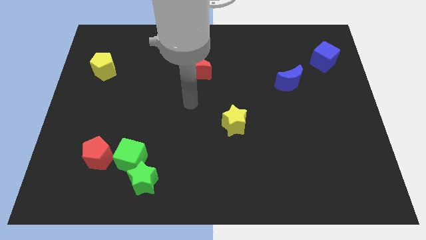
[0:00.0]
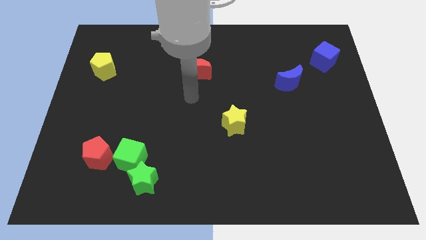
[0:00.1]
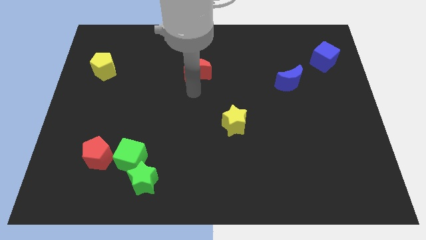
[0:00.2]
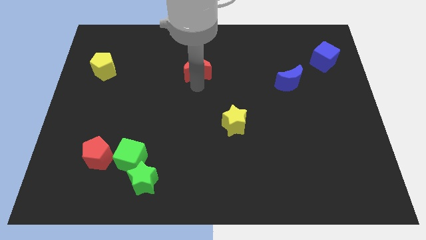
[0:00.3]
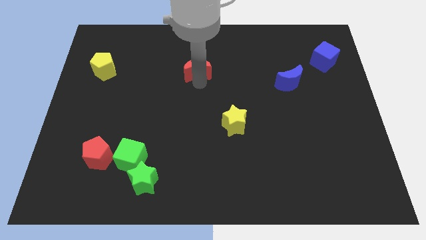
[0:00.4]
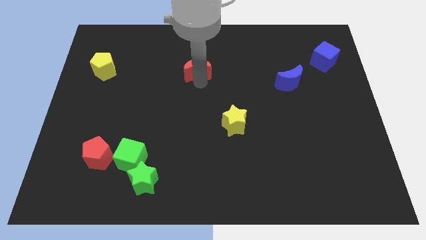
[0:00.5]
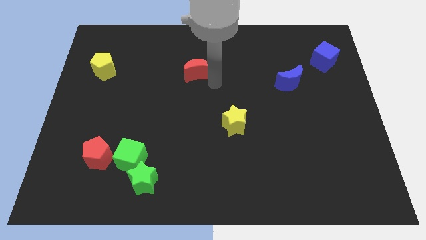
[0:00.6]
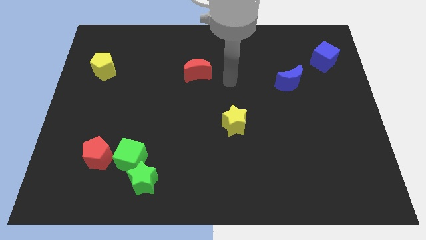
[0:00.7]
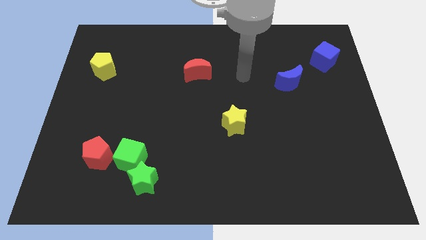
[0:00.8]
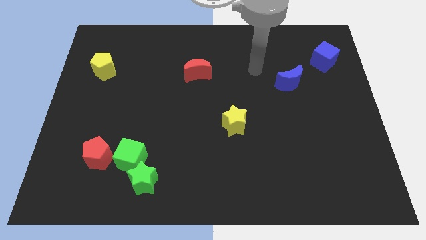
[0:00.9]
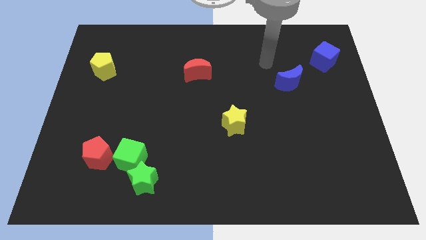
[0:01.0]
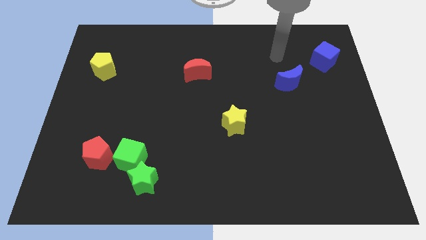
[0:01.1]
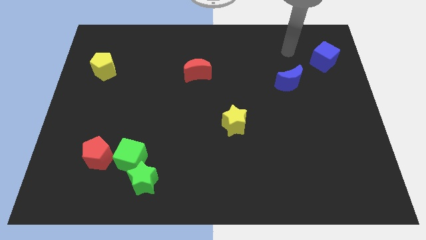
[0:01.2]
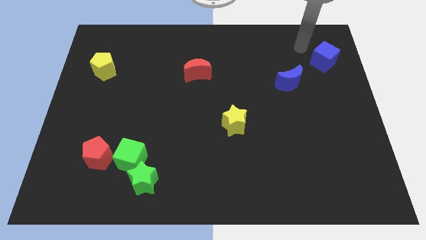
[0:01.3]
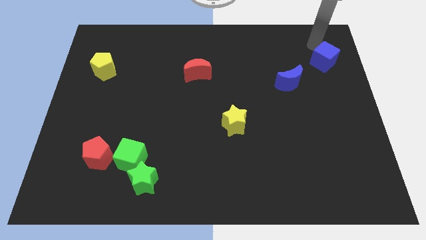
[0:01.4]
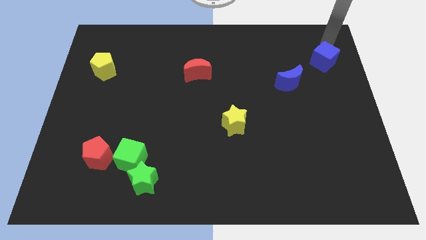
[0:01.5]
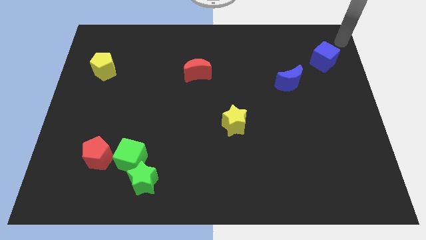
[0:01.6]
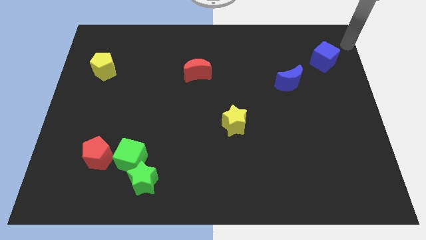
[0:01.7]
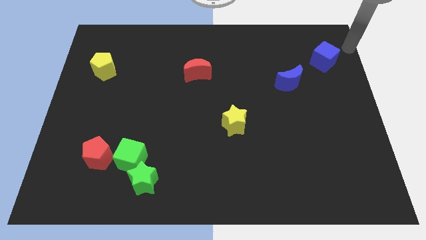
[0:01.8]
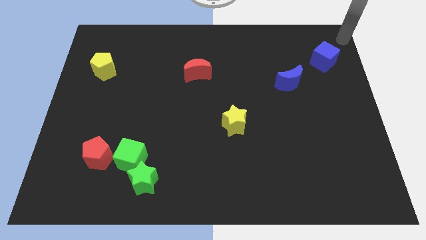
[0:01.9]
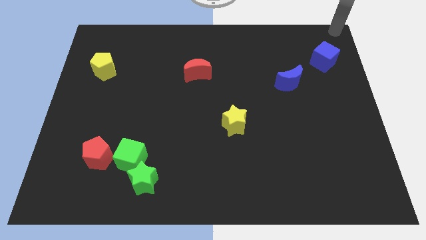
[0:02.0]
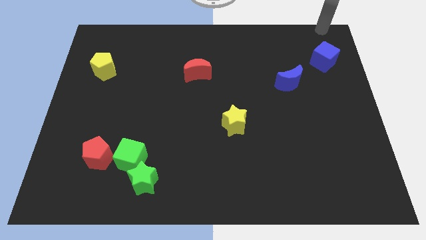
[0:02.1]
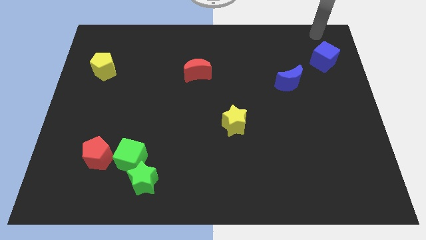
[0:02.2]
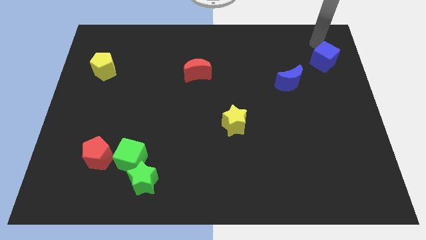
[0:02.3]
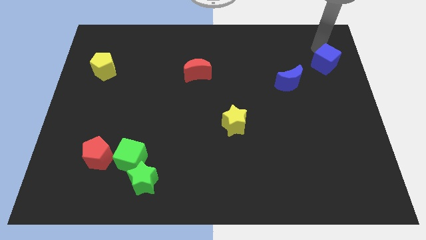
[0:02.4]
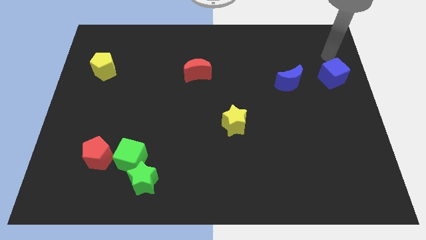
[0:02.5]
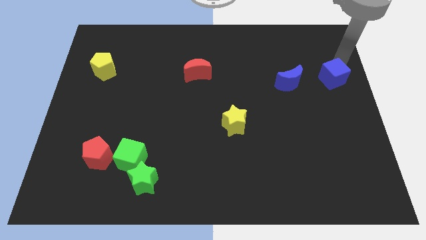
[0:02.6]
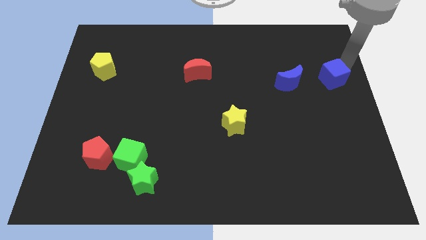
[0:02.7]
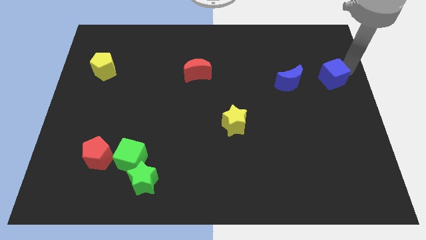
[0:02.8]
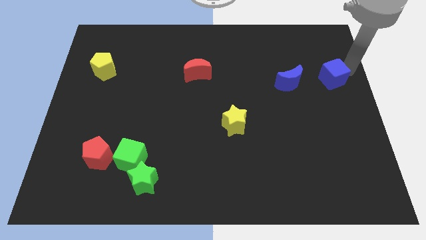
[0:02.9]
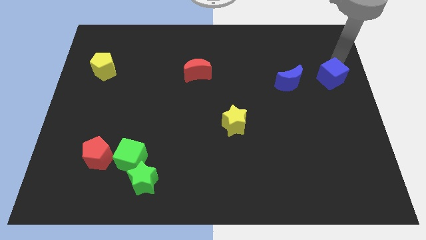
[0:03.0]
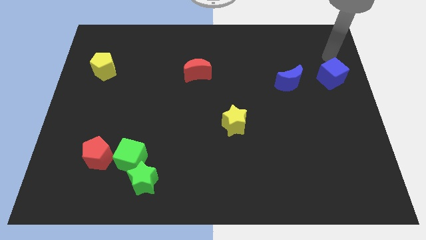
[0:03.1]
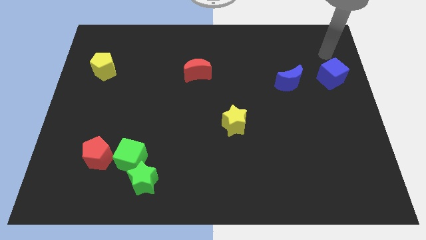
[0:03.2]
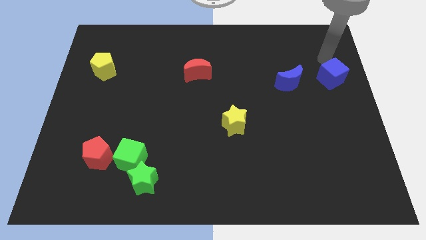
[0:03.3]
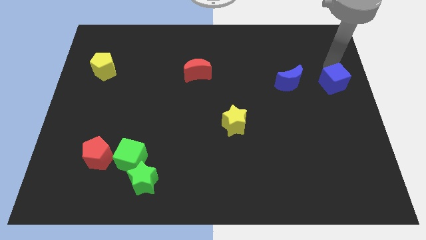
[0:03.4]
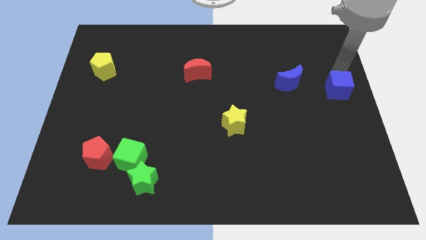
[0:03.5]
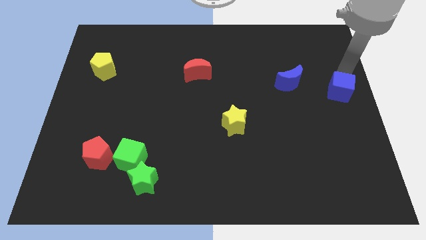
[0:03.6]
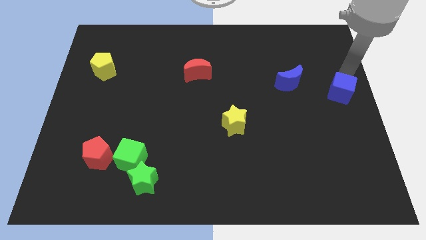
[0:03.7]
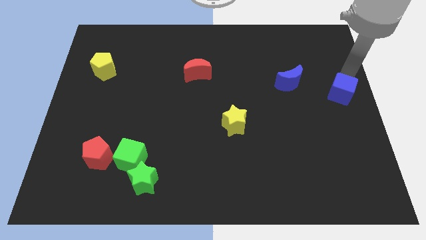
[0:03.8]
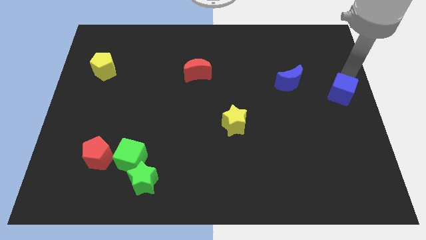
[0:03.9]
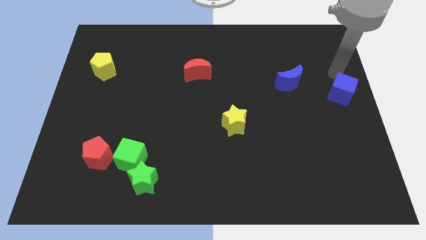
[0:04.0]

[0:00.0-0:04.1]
move the blue cube towards the right

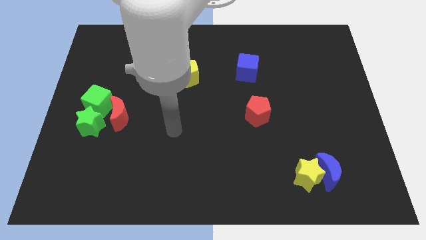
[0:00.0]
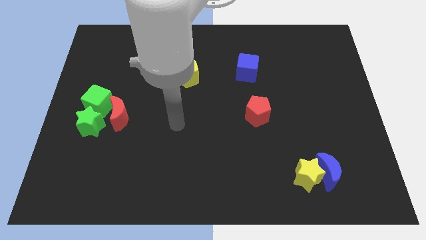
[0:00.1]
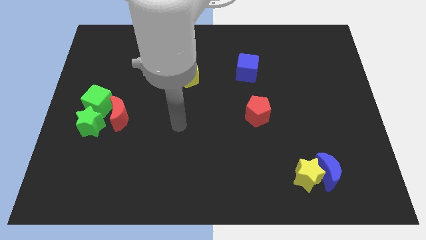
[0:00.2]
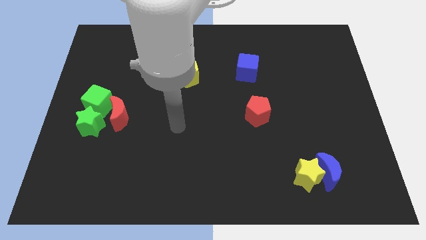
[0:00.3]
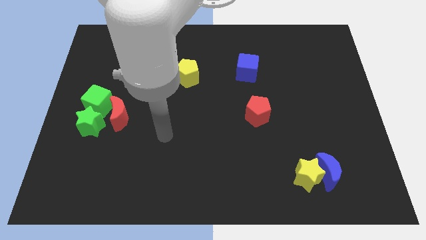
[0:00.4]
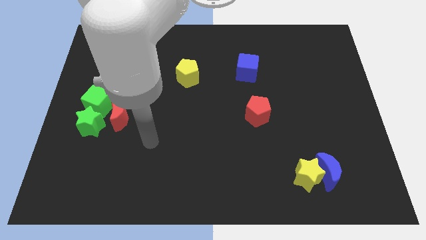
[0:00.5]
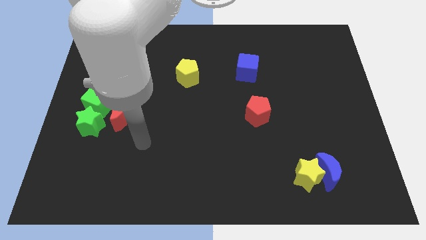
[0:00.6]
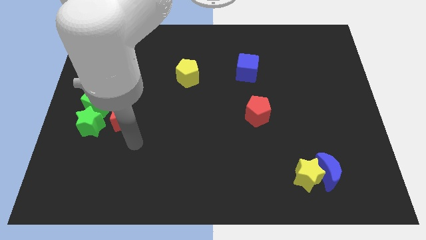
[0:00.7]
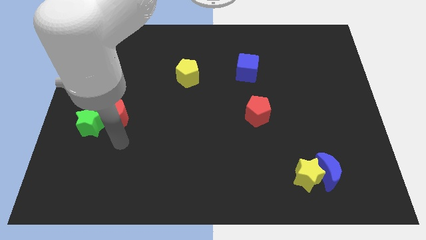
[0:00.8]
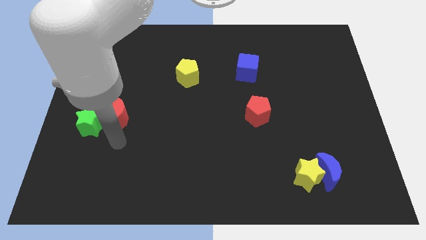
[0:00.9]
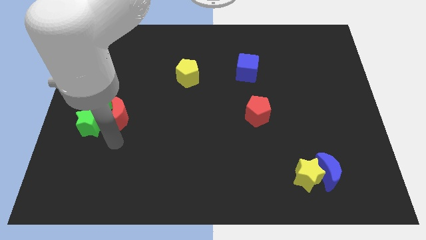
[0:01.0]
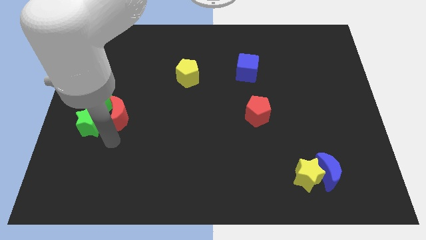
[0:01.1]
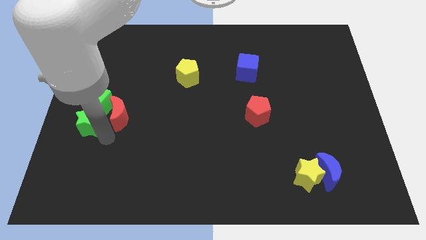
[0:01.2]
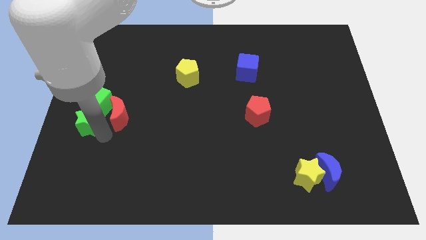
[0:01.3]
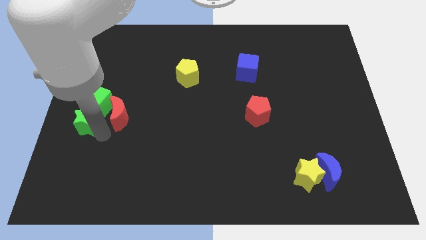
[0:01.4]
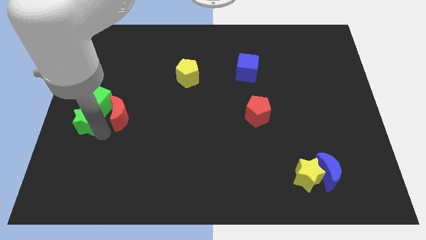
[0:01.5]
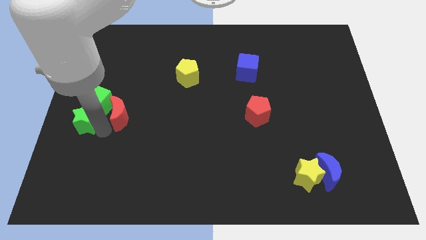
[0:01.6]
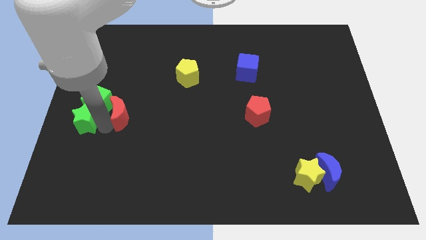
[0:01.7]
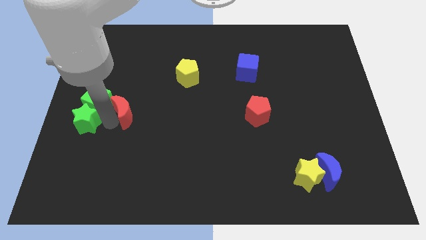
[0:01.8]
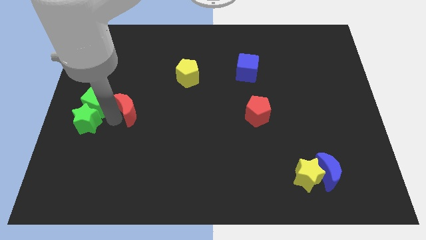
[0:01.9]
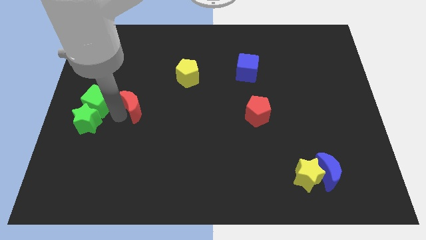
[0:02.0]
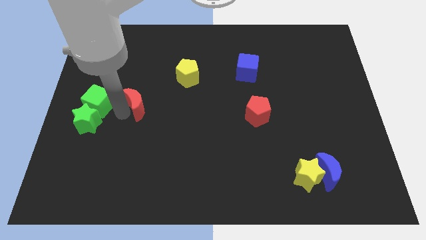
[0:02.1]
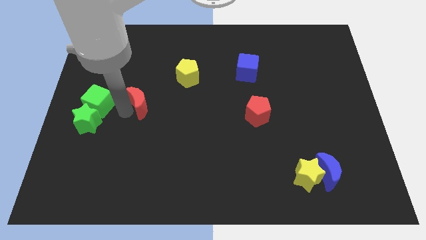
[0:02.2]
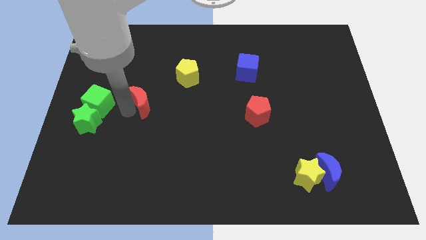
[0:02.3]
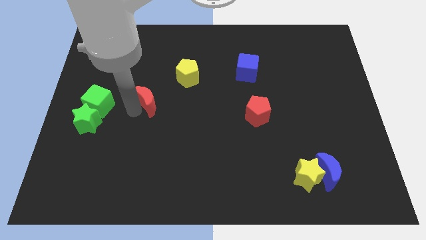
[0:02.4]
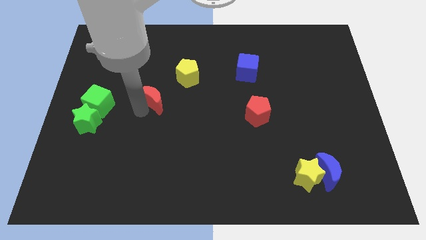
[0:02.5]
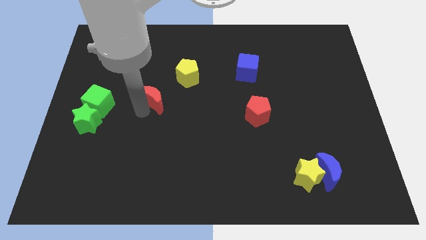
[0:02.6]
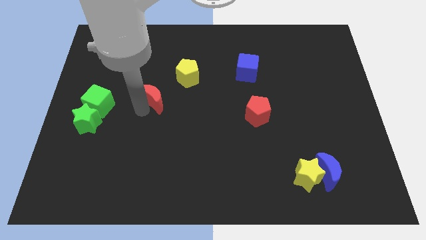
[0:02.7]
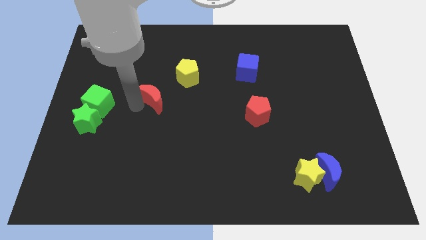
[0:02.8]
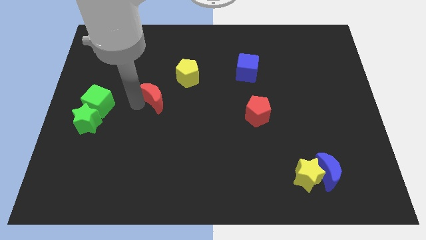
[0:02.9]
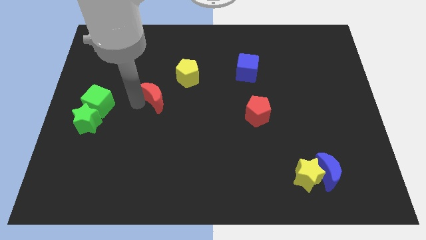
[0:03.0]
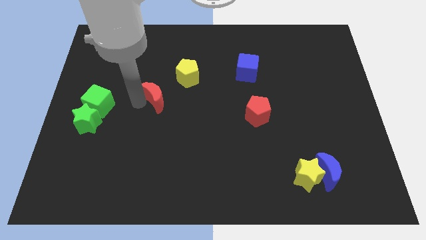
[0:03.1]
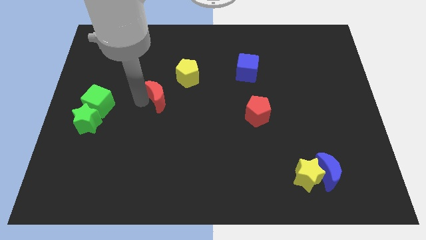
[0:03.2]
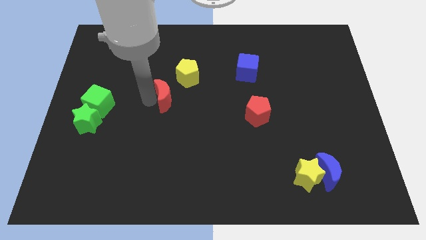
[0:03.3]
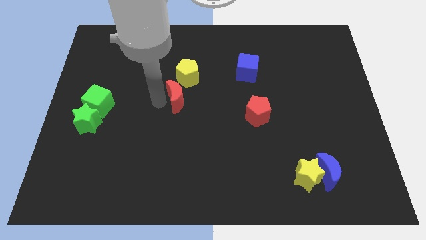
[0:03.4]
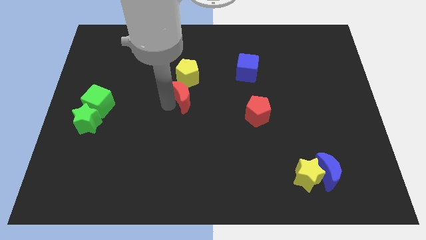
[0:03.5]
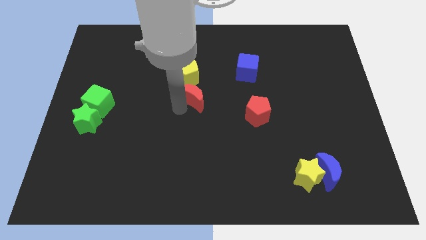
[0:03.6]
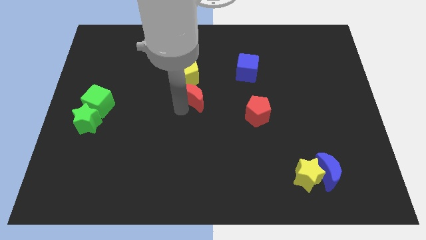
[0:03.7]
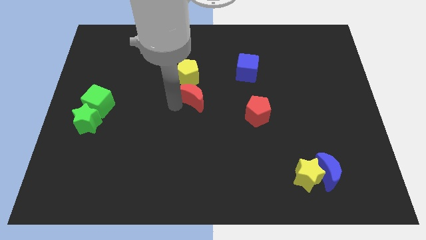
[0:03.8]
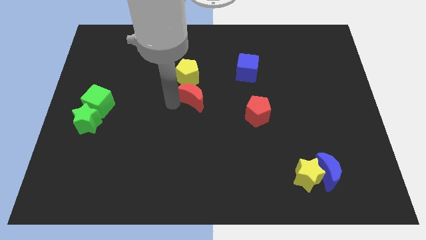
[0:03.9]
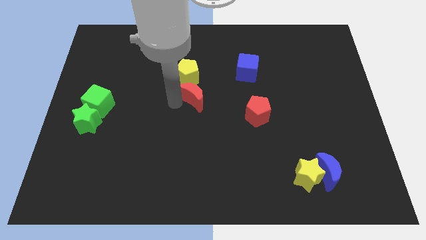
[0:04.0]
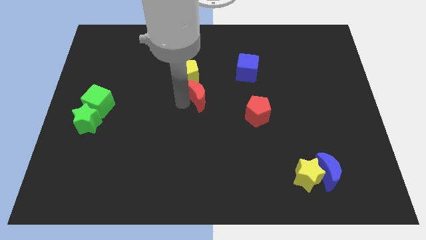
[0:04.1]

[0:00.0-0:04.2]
place the red crescent below the yellow pentagon

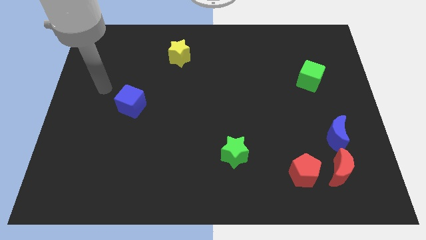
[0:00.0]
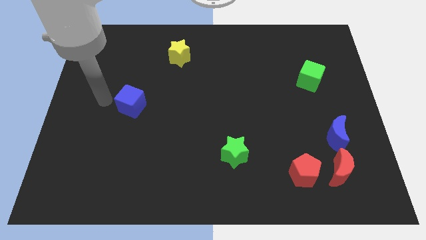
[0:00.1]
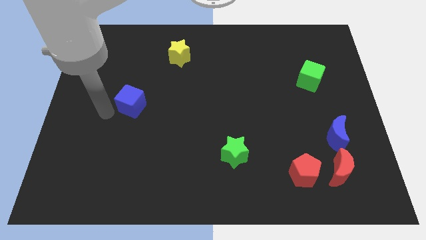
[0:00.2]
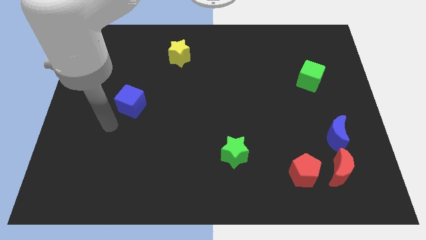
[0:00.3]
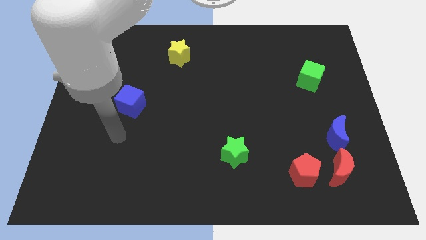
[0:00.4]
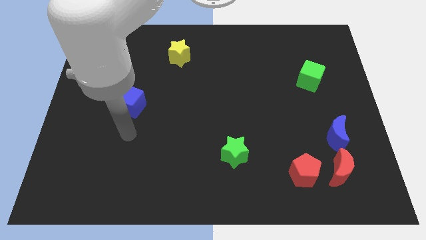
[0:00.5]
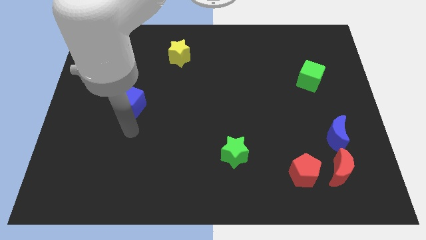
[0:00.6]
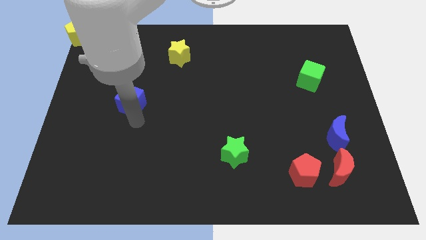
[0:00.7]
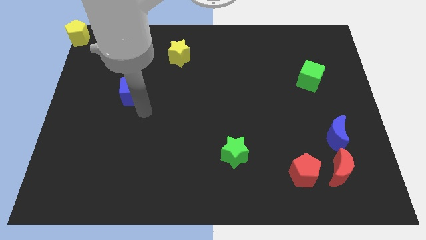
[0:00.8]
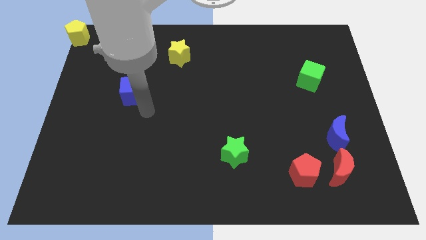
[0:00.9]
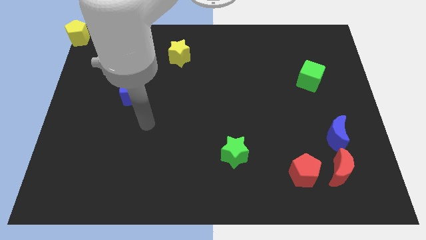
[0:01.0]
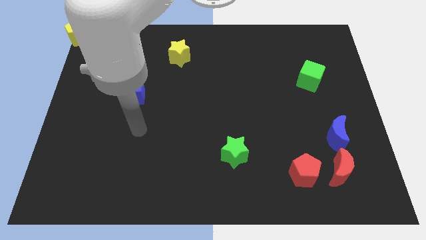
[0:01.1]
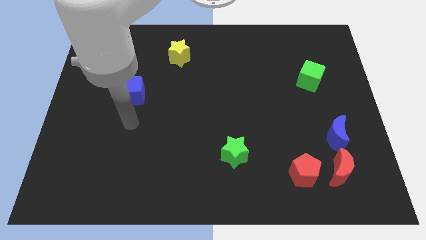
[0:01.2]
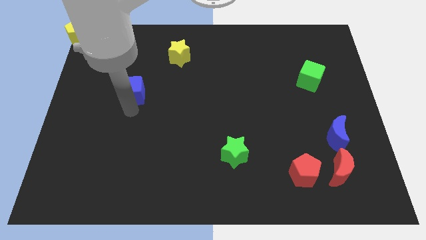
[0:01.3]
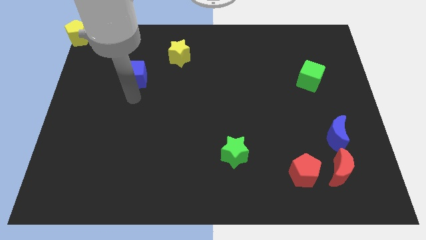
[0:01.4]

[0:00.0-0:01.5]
move blue cube left below the yellow star
